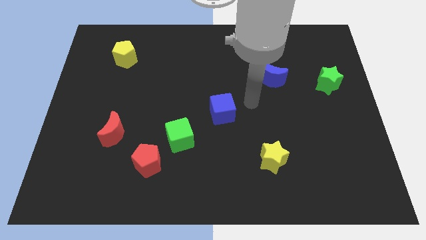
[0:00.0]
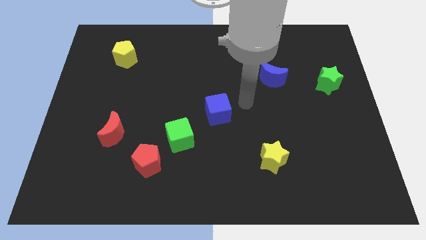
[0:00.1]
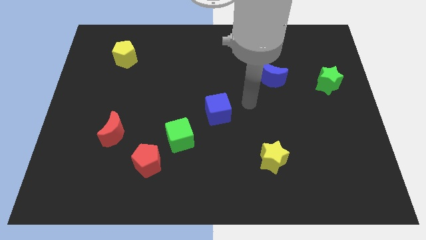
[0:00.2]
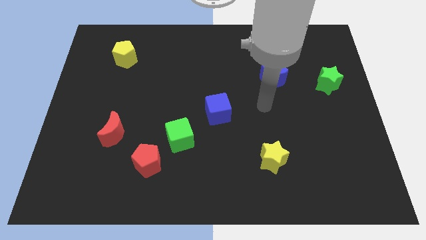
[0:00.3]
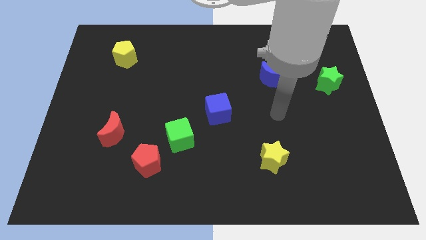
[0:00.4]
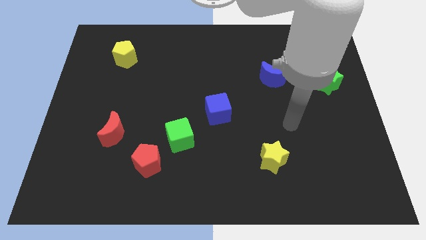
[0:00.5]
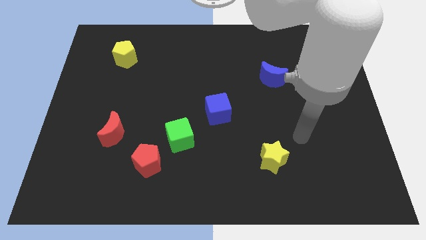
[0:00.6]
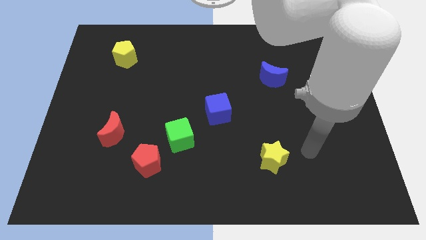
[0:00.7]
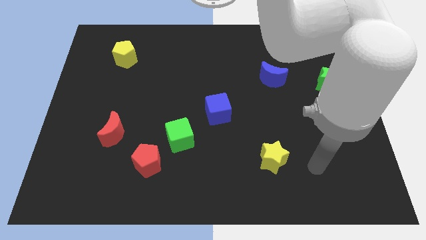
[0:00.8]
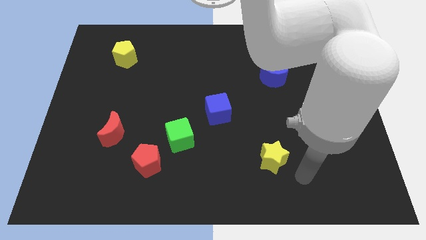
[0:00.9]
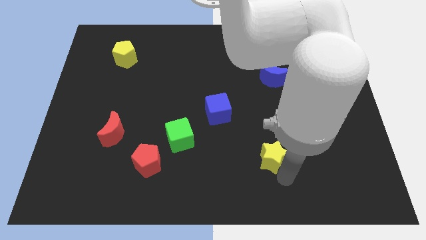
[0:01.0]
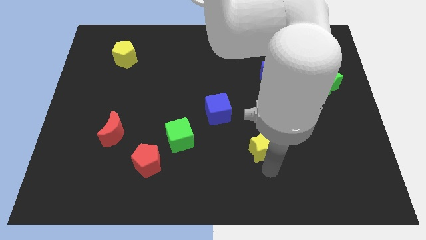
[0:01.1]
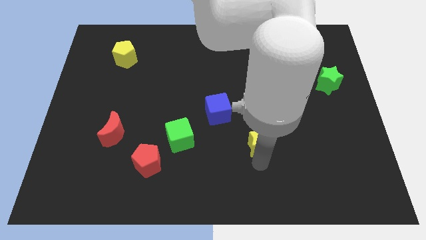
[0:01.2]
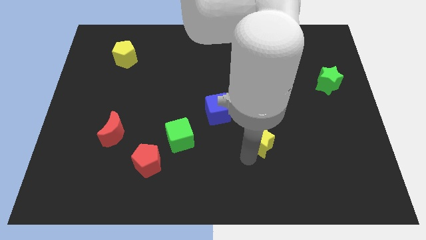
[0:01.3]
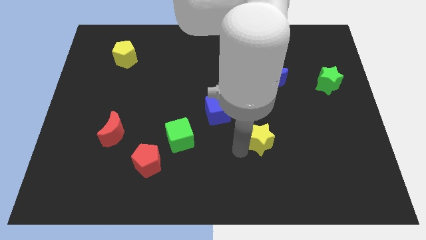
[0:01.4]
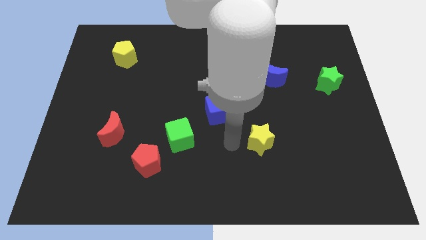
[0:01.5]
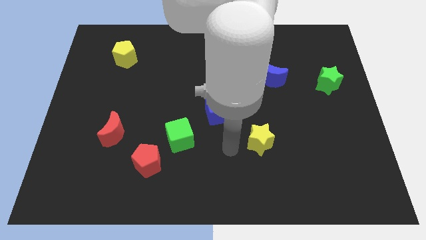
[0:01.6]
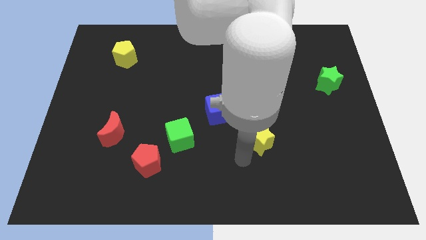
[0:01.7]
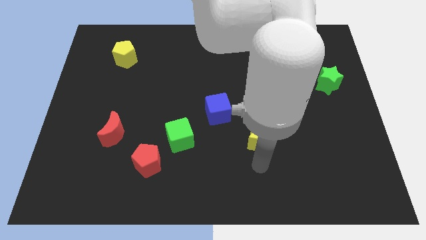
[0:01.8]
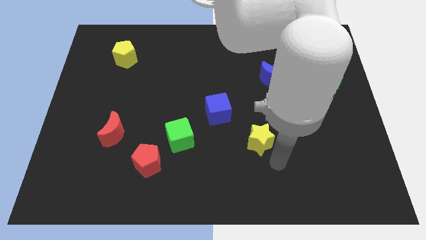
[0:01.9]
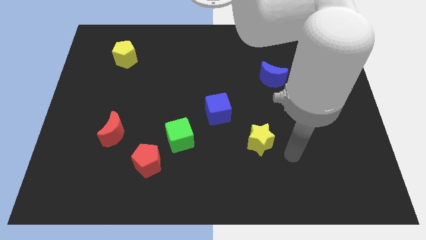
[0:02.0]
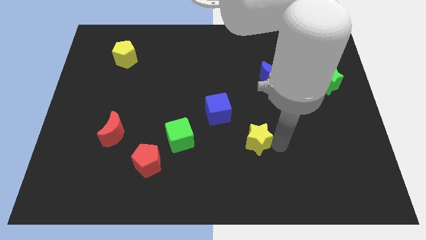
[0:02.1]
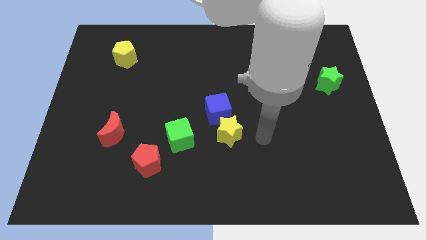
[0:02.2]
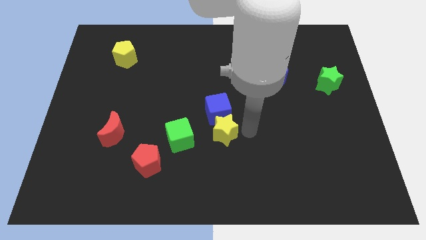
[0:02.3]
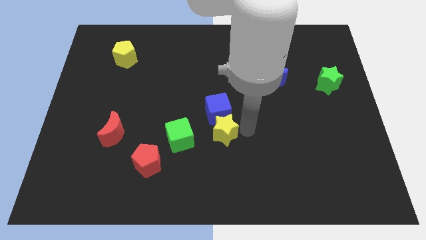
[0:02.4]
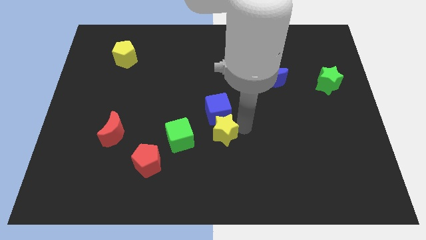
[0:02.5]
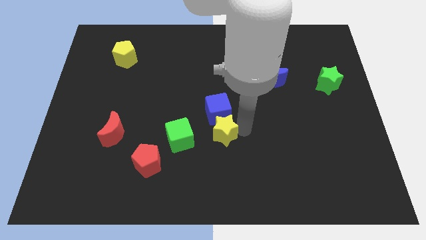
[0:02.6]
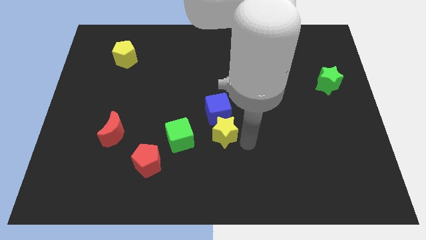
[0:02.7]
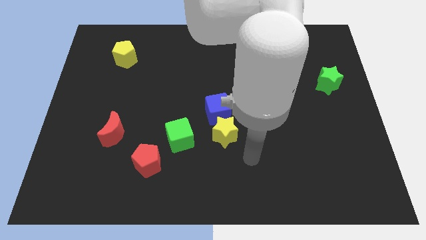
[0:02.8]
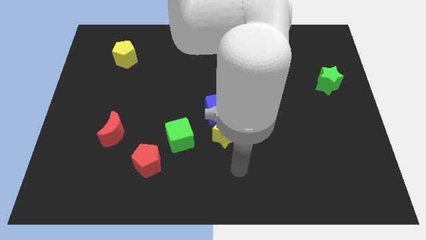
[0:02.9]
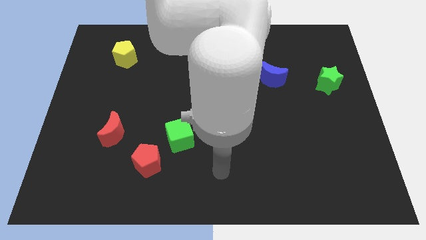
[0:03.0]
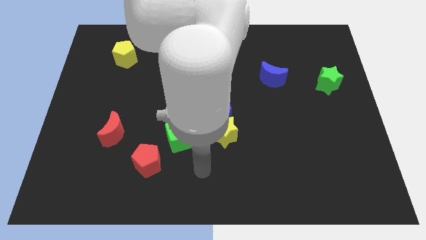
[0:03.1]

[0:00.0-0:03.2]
move the blue cube and yellow star to the center of the board

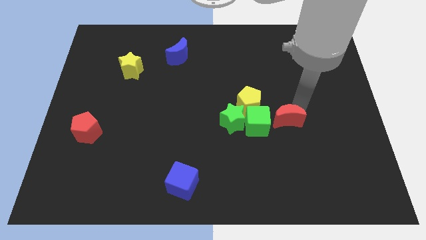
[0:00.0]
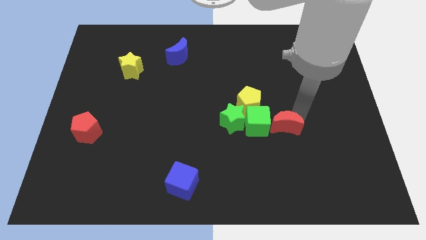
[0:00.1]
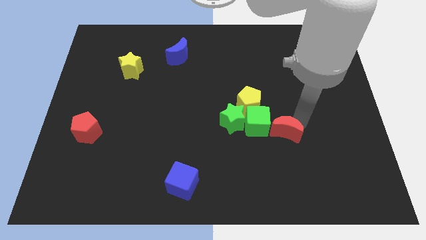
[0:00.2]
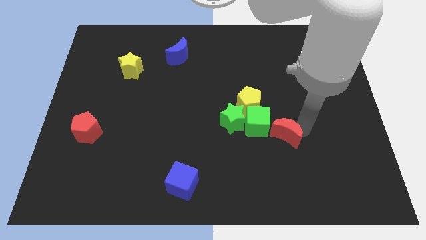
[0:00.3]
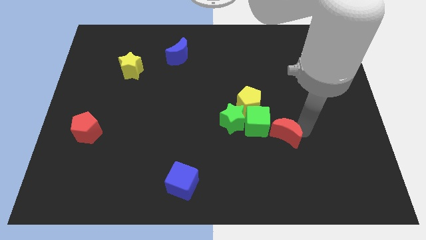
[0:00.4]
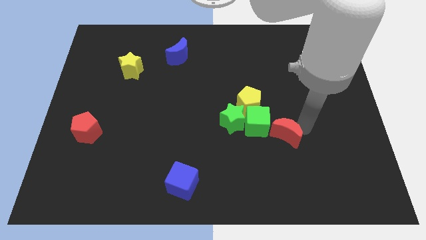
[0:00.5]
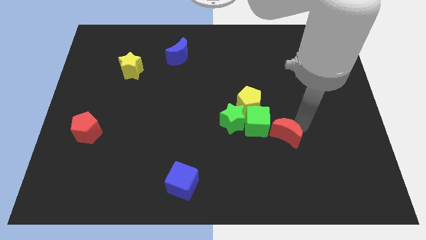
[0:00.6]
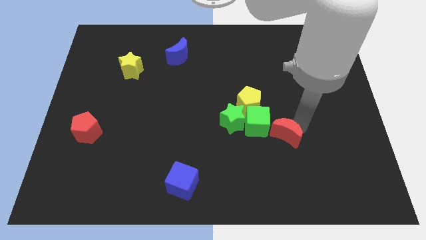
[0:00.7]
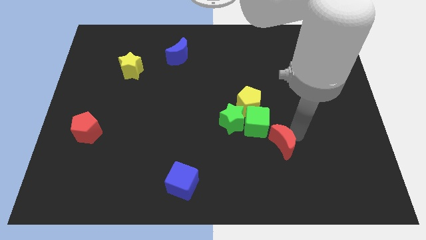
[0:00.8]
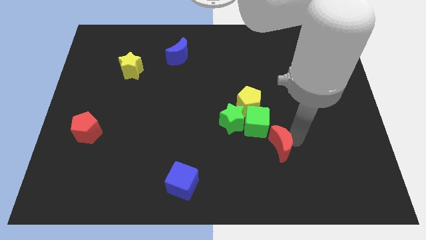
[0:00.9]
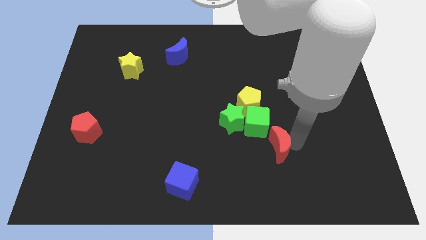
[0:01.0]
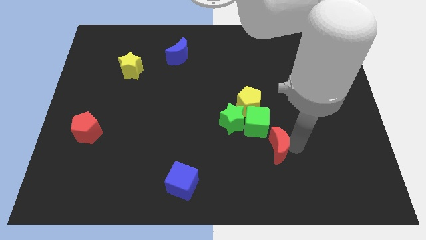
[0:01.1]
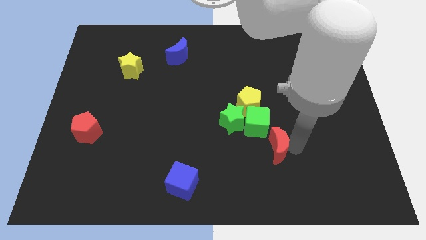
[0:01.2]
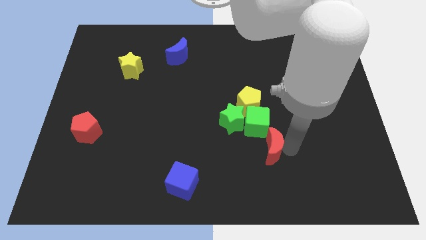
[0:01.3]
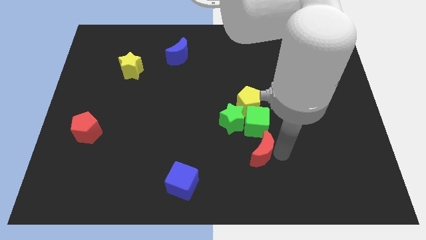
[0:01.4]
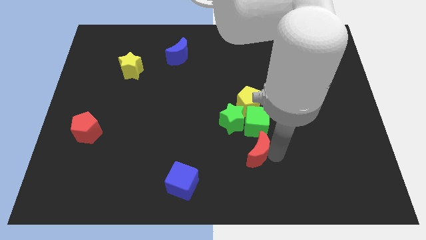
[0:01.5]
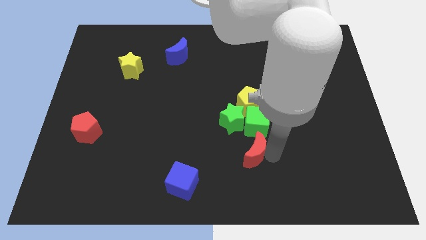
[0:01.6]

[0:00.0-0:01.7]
move the red moon below the green cube

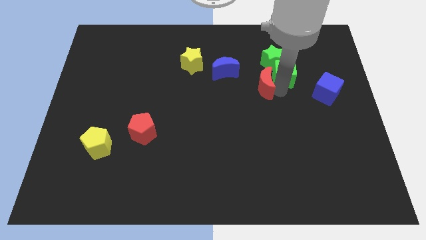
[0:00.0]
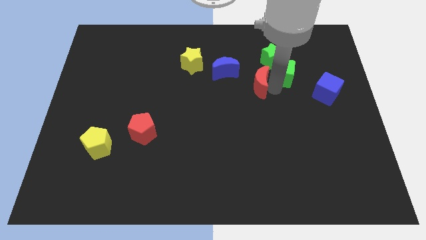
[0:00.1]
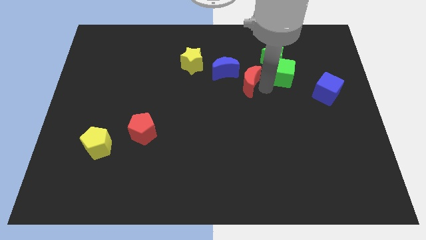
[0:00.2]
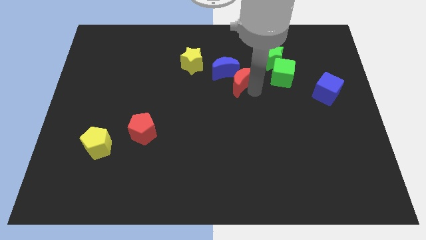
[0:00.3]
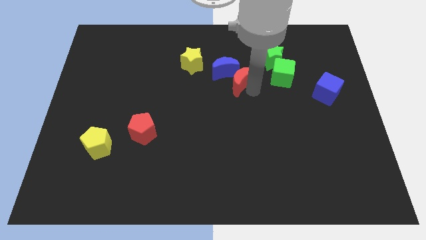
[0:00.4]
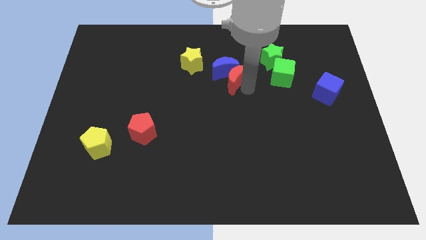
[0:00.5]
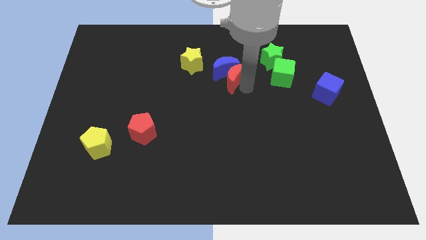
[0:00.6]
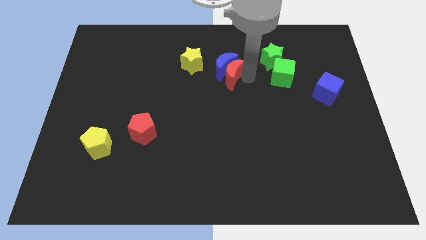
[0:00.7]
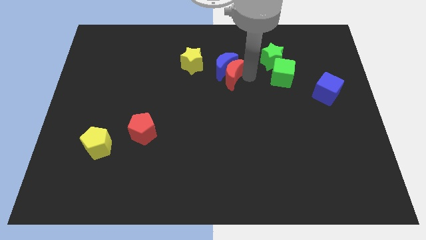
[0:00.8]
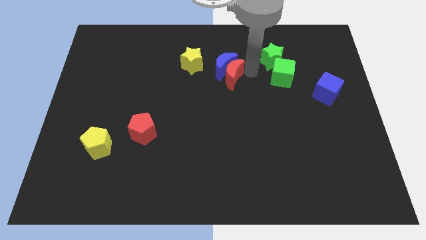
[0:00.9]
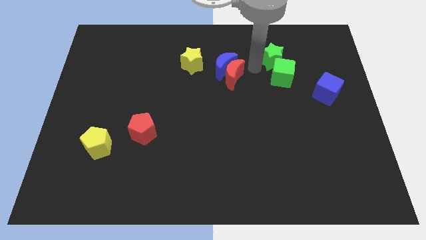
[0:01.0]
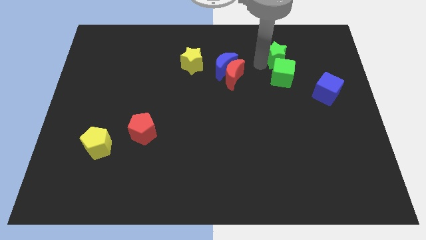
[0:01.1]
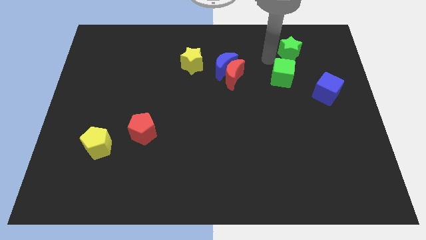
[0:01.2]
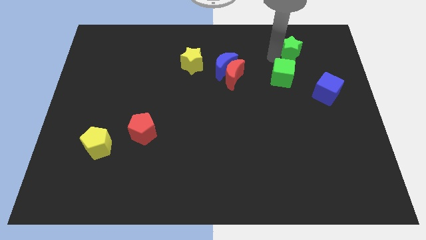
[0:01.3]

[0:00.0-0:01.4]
move the red crescent into the blue crescent

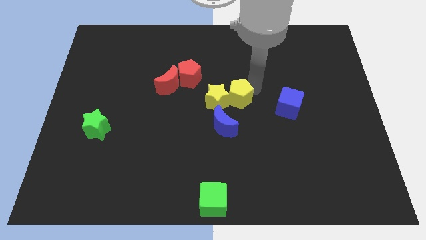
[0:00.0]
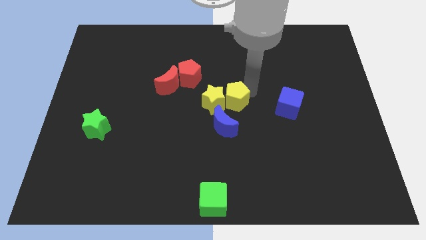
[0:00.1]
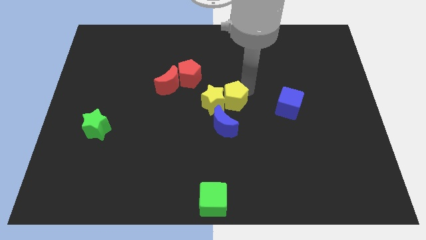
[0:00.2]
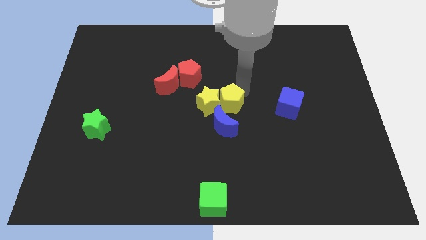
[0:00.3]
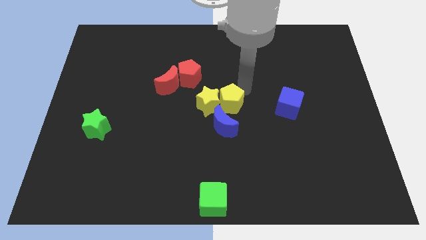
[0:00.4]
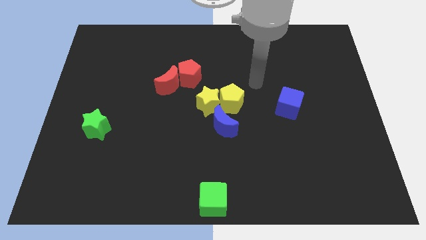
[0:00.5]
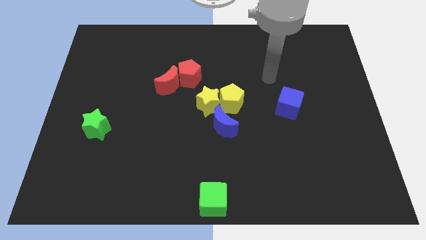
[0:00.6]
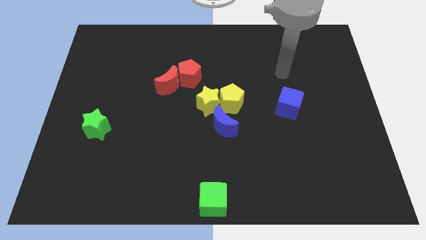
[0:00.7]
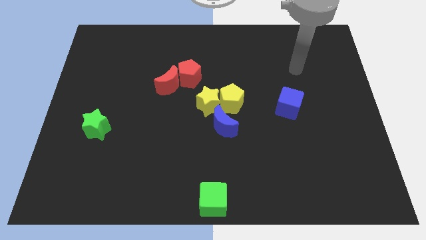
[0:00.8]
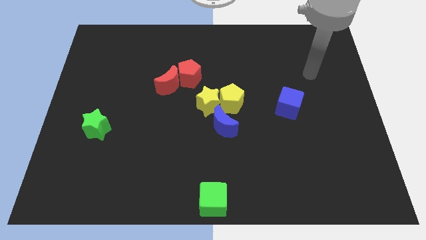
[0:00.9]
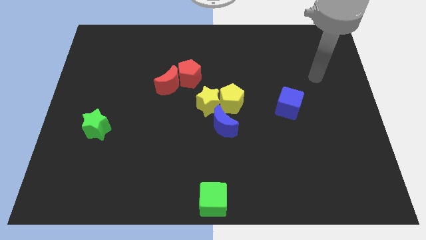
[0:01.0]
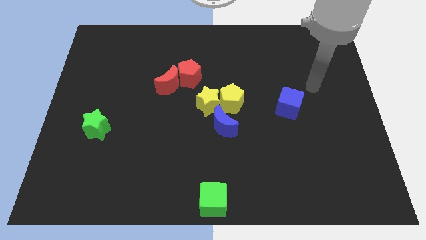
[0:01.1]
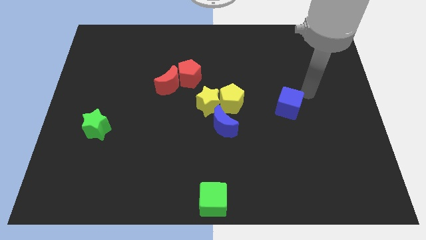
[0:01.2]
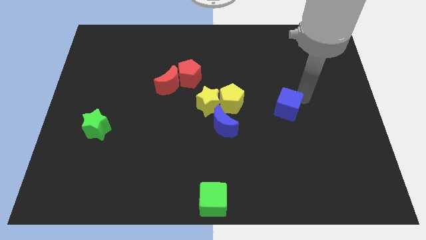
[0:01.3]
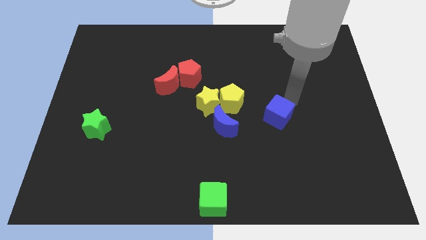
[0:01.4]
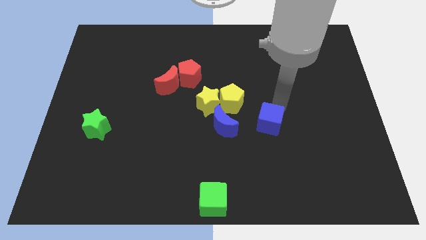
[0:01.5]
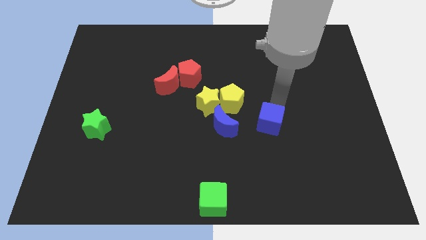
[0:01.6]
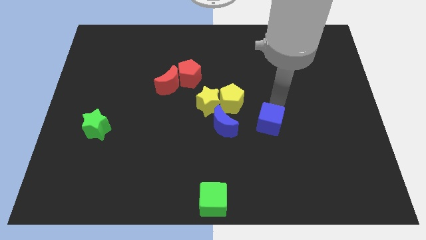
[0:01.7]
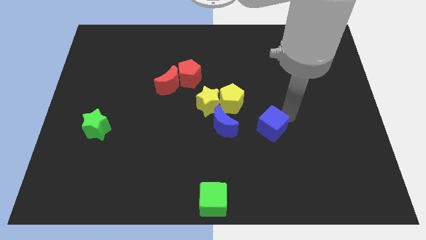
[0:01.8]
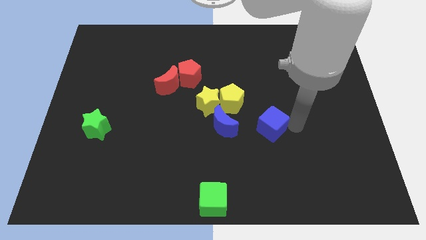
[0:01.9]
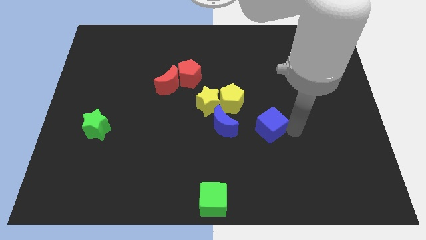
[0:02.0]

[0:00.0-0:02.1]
slide the blue cube horizontally to the blue crescent

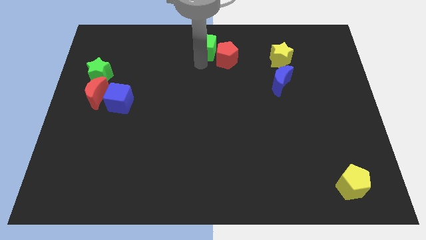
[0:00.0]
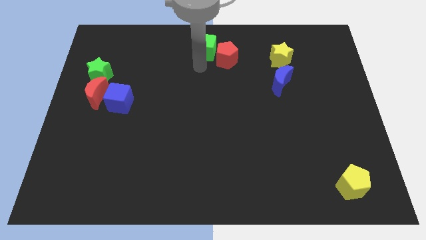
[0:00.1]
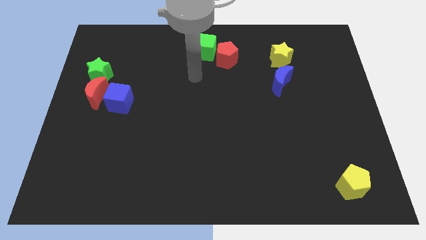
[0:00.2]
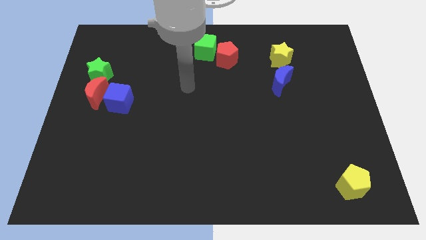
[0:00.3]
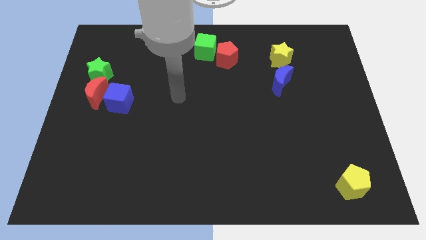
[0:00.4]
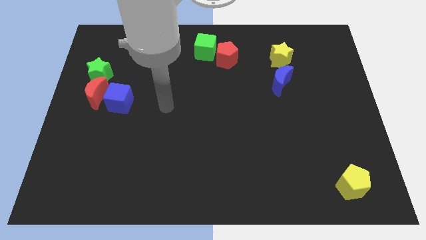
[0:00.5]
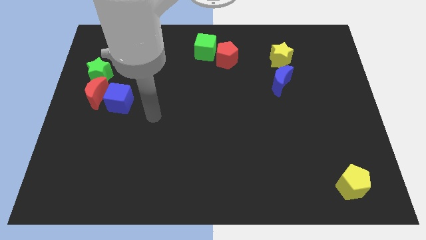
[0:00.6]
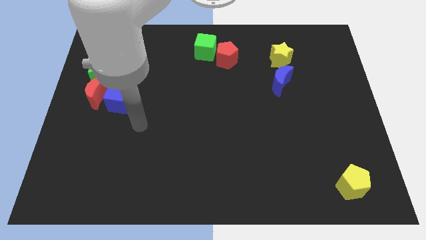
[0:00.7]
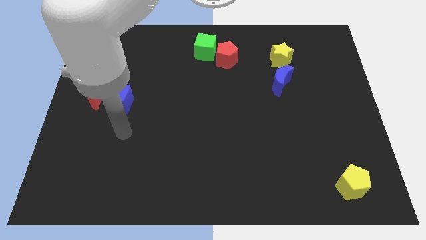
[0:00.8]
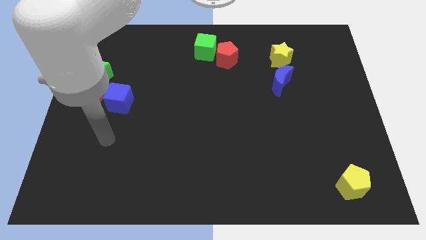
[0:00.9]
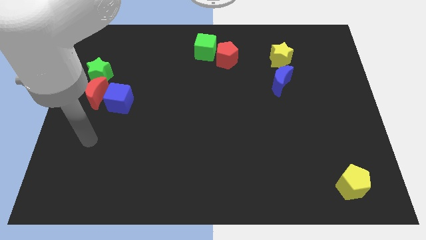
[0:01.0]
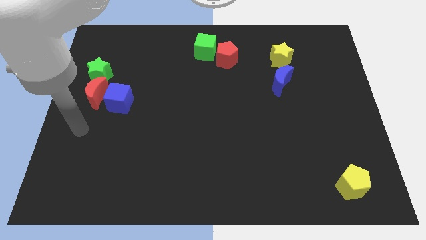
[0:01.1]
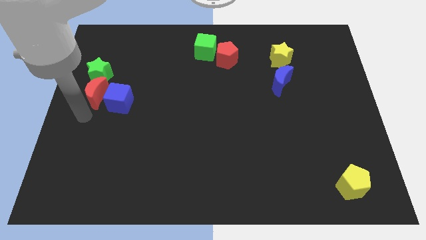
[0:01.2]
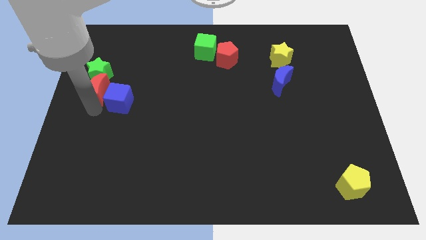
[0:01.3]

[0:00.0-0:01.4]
move the arm towards the bottom of the red crescent
